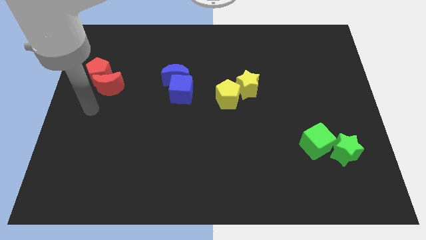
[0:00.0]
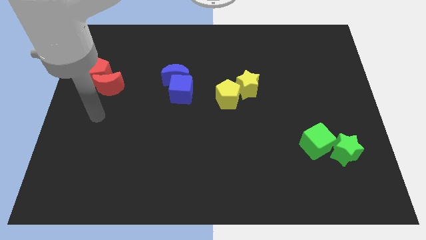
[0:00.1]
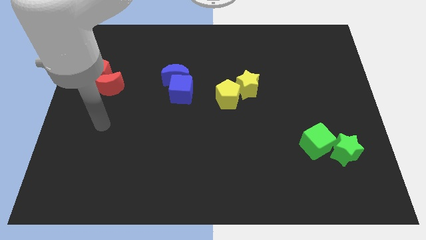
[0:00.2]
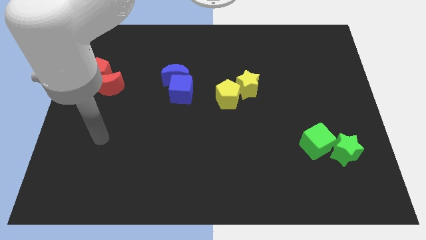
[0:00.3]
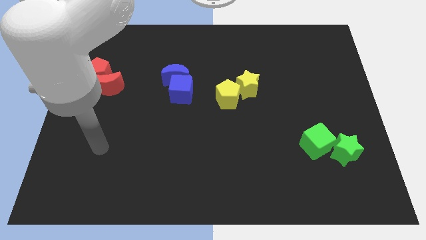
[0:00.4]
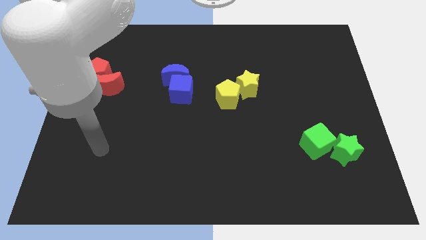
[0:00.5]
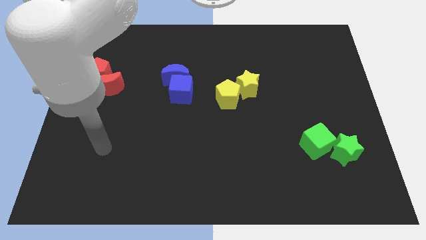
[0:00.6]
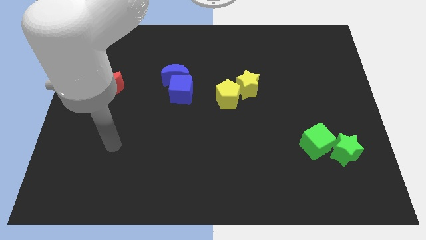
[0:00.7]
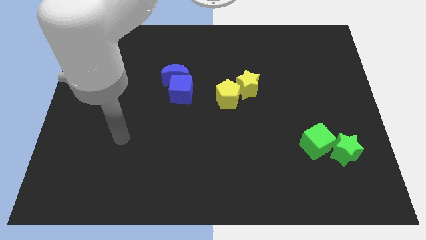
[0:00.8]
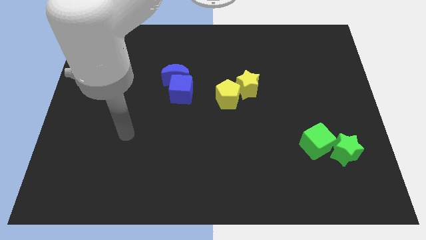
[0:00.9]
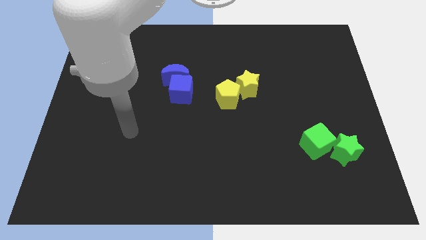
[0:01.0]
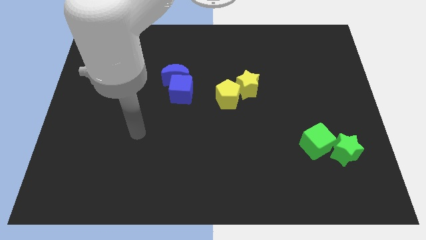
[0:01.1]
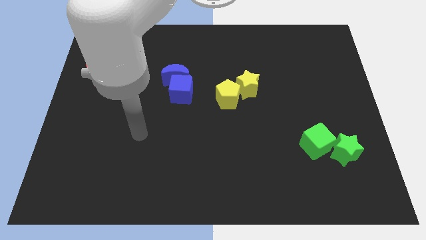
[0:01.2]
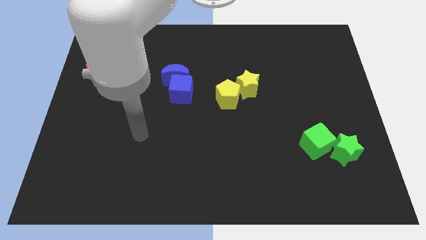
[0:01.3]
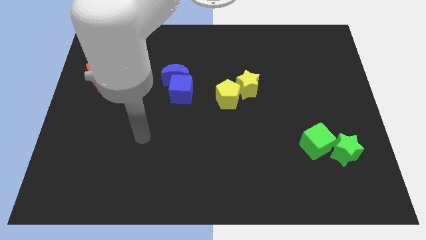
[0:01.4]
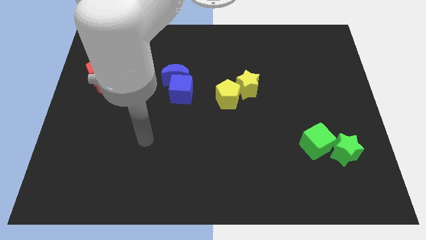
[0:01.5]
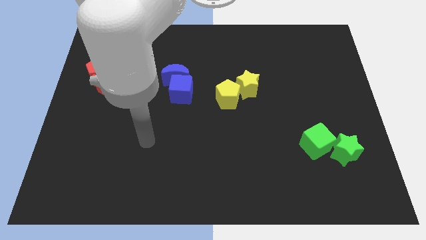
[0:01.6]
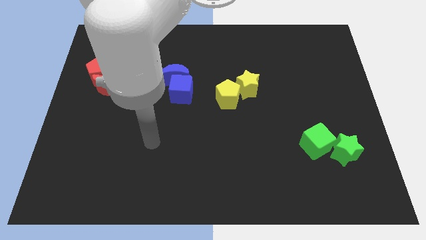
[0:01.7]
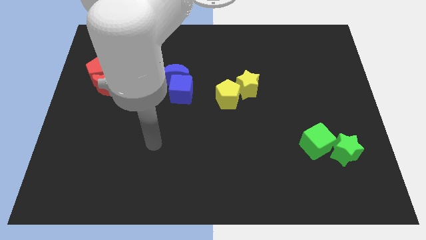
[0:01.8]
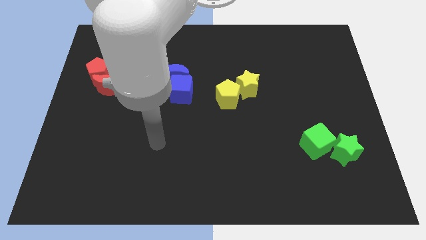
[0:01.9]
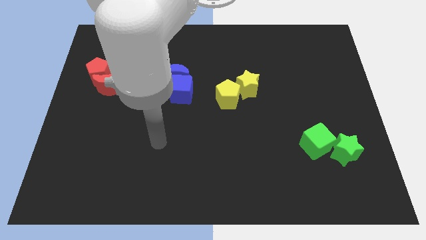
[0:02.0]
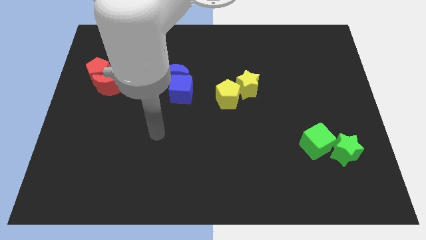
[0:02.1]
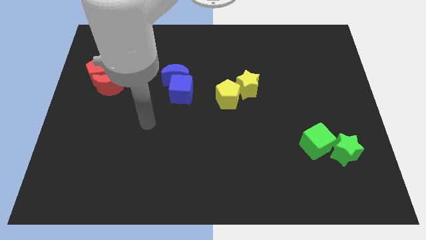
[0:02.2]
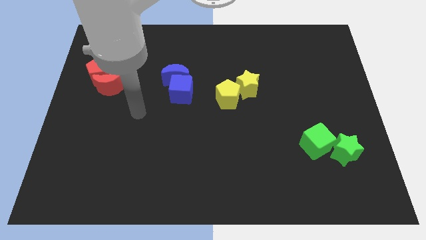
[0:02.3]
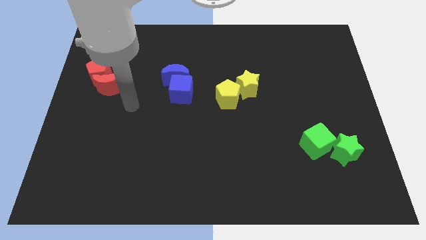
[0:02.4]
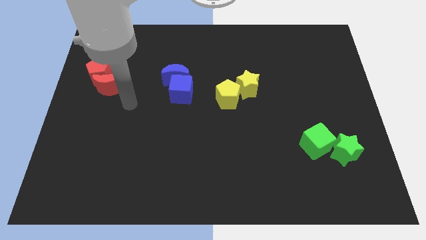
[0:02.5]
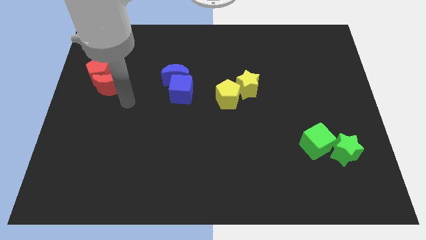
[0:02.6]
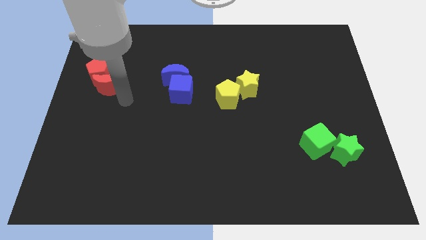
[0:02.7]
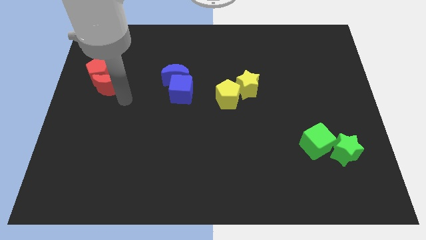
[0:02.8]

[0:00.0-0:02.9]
move the arm towards the right bottom of the red crescent

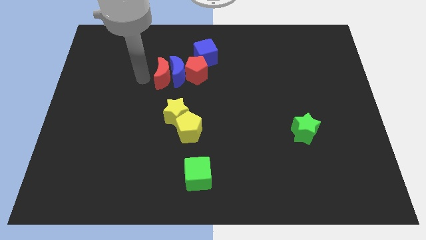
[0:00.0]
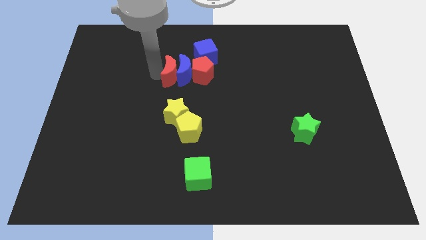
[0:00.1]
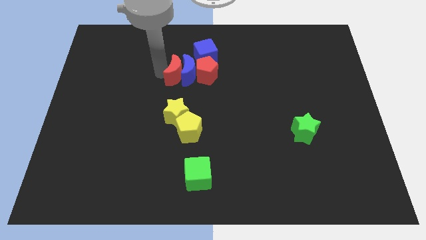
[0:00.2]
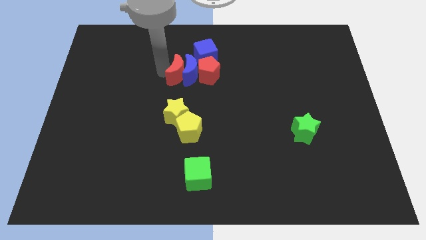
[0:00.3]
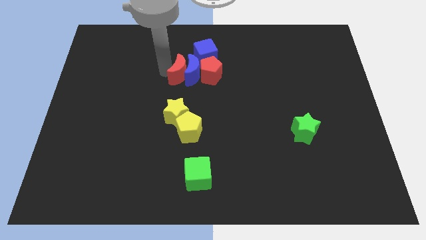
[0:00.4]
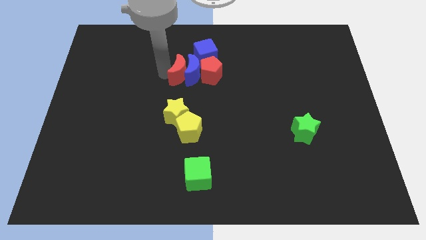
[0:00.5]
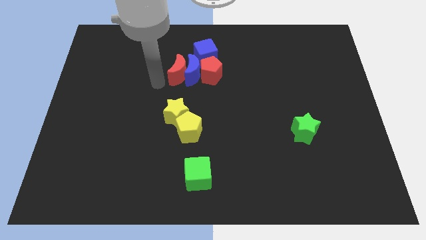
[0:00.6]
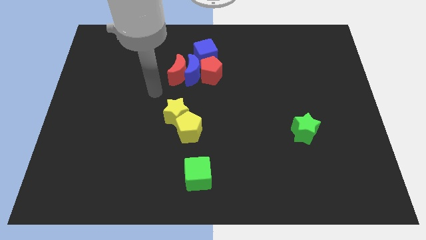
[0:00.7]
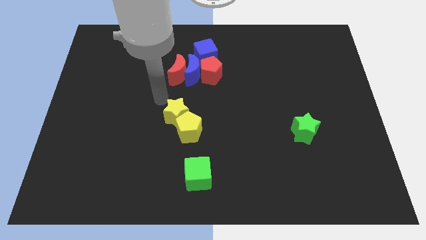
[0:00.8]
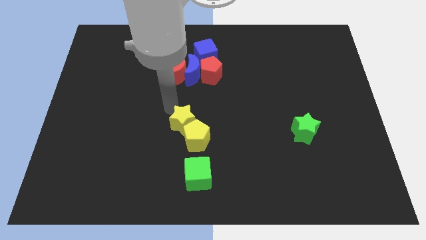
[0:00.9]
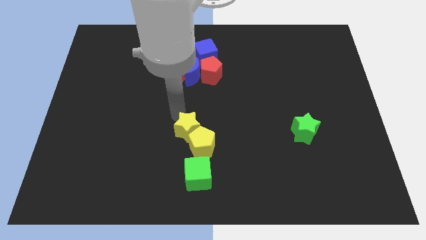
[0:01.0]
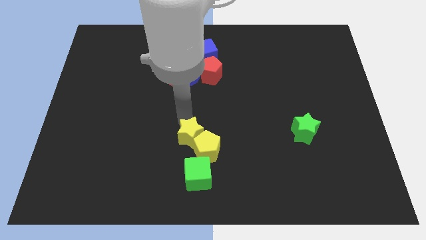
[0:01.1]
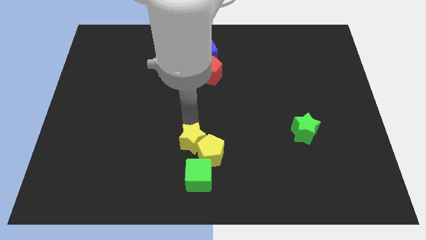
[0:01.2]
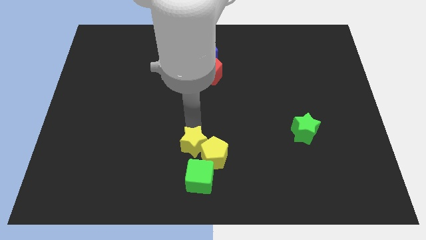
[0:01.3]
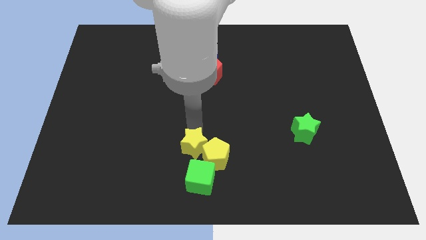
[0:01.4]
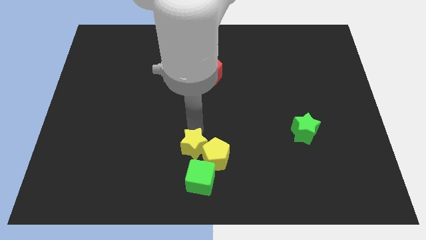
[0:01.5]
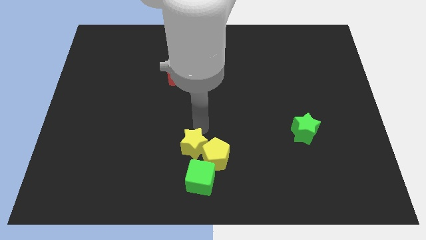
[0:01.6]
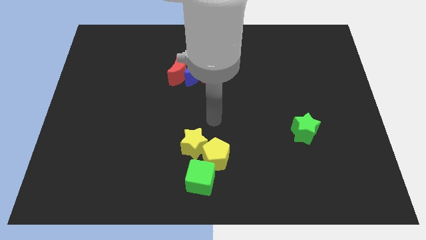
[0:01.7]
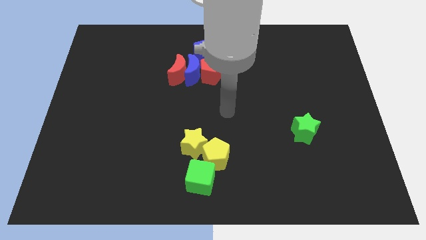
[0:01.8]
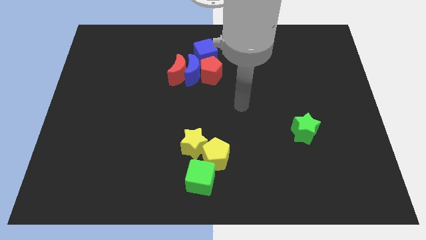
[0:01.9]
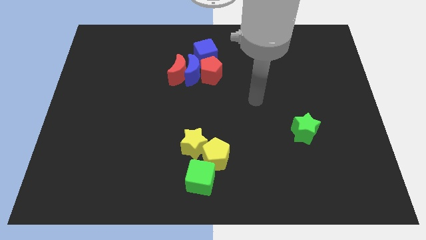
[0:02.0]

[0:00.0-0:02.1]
push the red and blue blocks and touch the green star

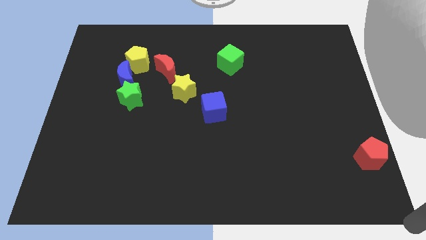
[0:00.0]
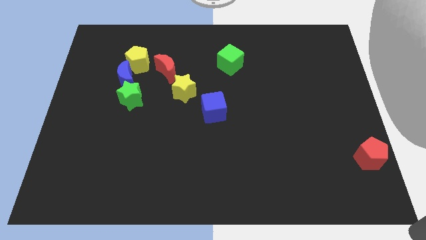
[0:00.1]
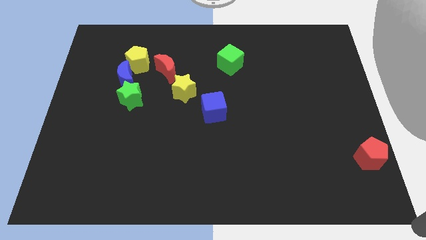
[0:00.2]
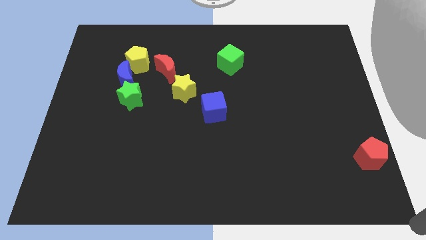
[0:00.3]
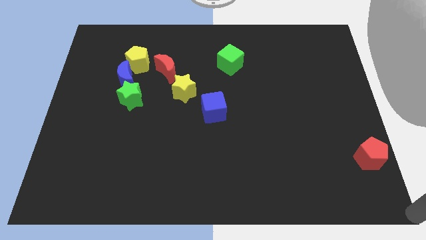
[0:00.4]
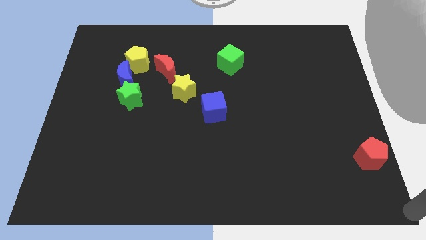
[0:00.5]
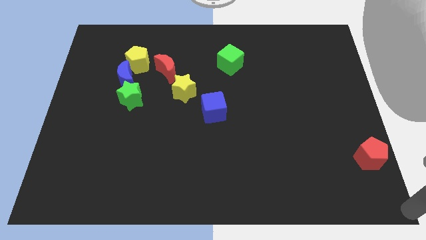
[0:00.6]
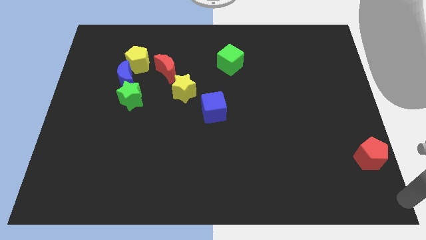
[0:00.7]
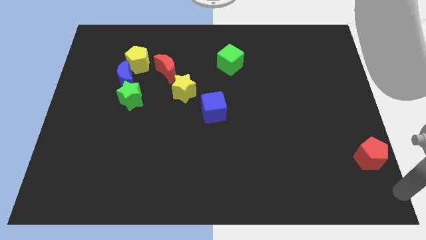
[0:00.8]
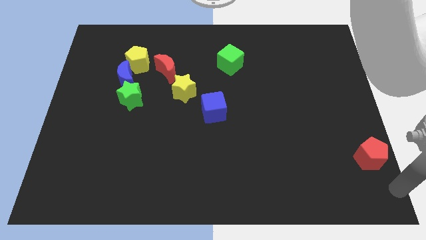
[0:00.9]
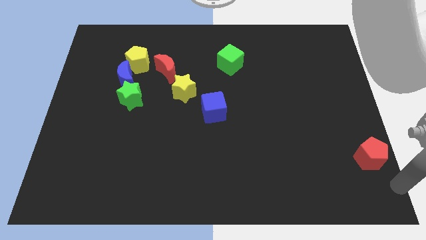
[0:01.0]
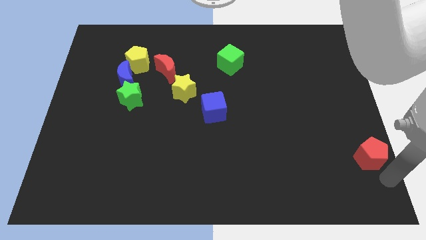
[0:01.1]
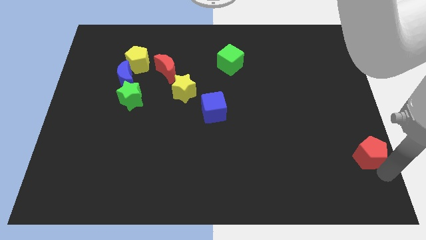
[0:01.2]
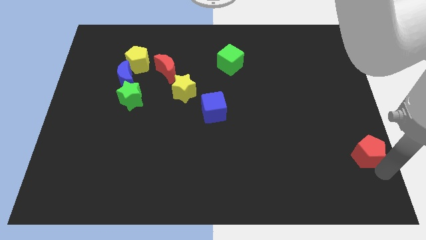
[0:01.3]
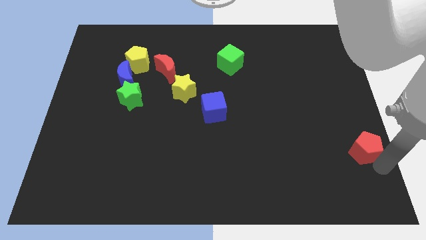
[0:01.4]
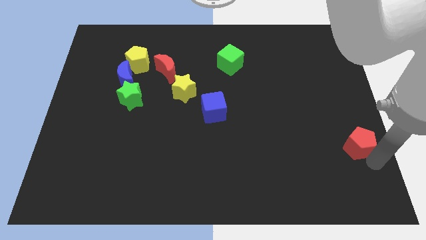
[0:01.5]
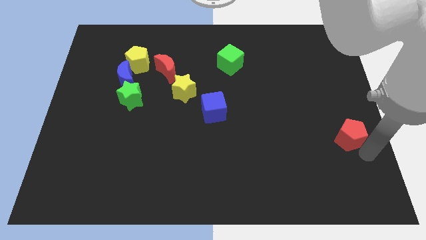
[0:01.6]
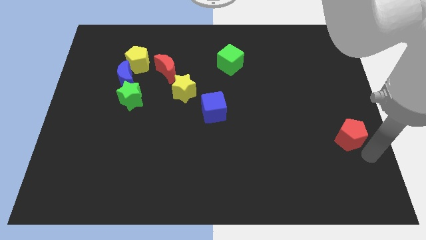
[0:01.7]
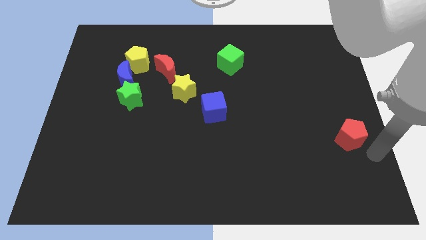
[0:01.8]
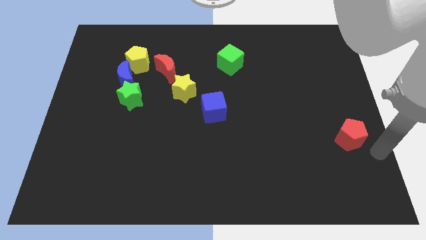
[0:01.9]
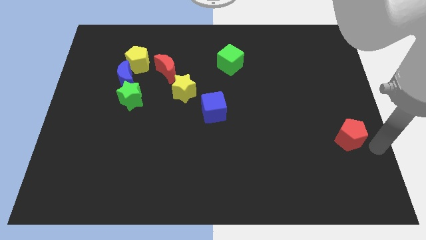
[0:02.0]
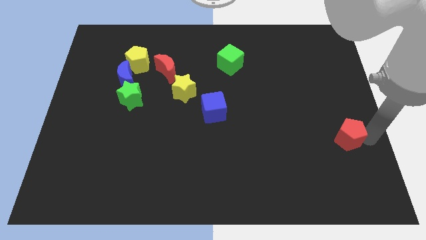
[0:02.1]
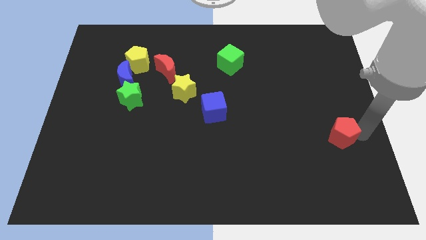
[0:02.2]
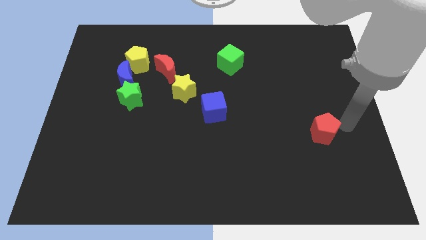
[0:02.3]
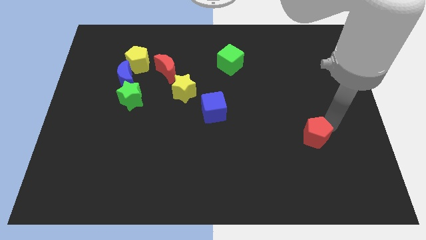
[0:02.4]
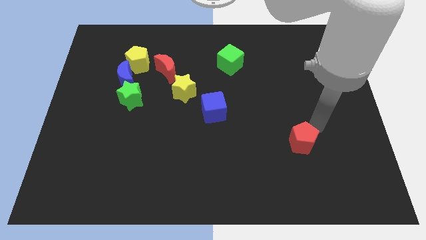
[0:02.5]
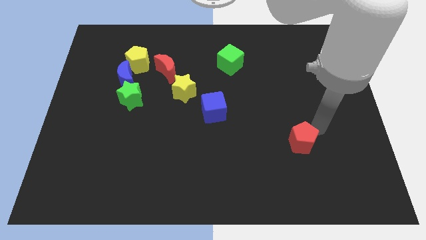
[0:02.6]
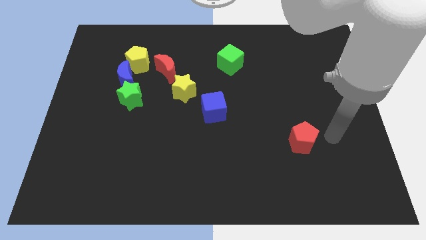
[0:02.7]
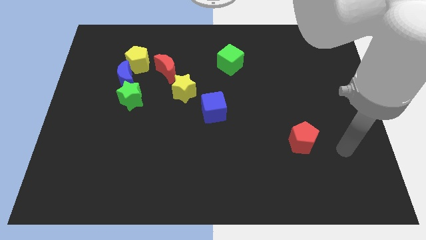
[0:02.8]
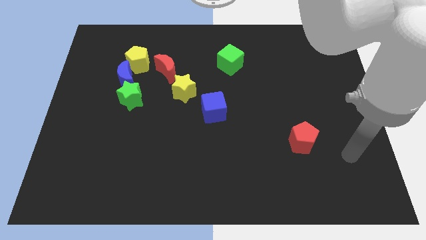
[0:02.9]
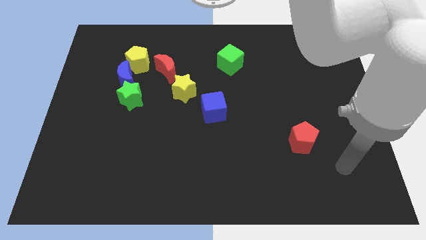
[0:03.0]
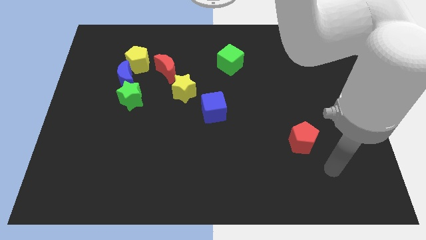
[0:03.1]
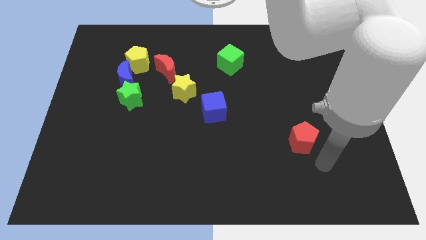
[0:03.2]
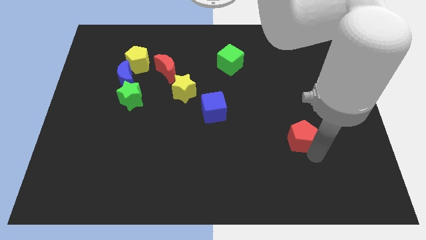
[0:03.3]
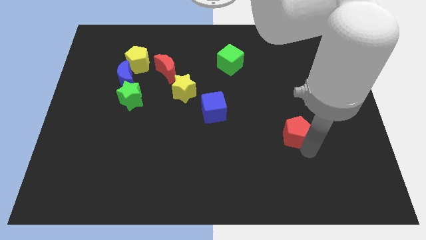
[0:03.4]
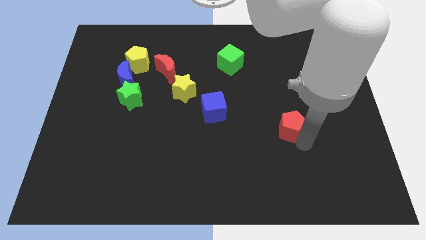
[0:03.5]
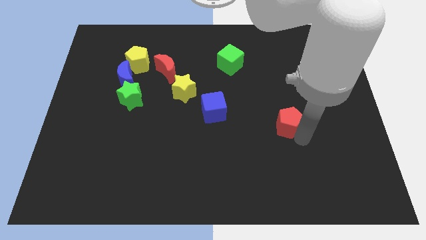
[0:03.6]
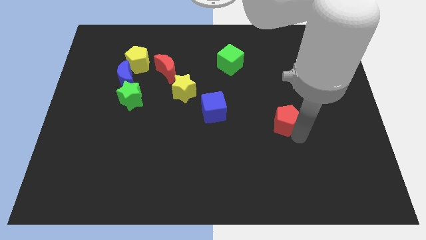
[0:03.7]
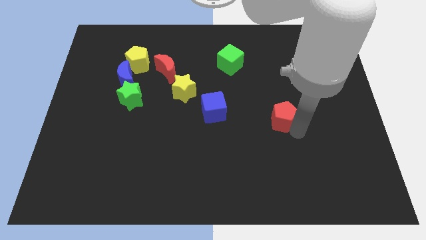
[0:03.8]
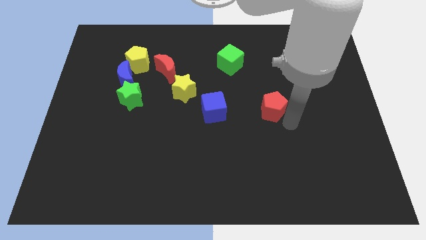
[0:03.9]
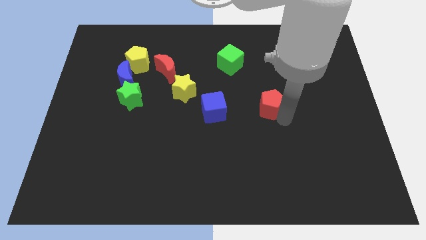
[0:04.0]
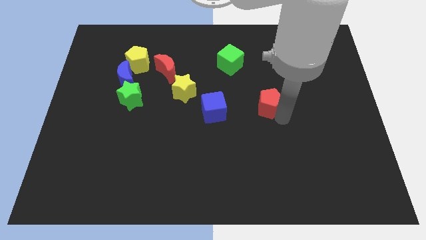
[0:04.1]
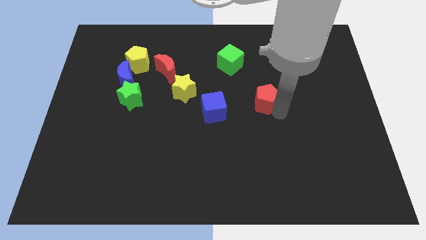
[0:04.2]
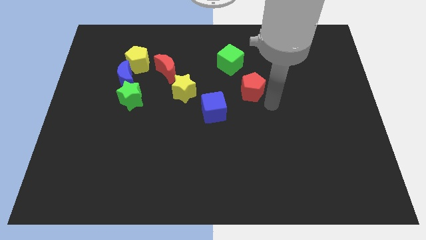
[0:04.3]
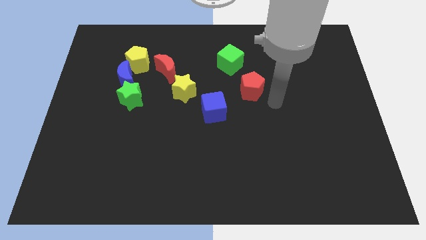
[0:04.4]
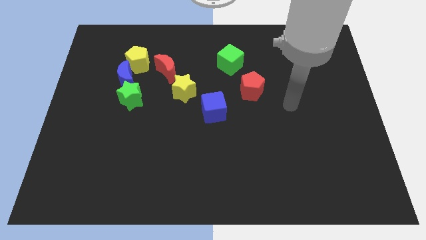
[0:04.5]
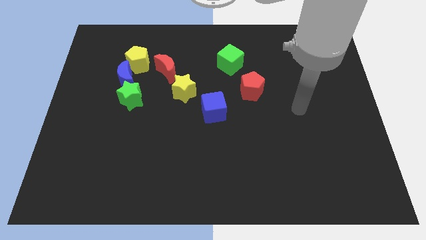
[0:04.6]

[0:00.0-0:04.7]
move the red pentagon to the right of the yellow star
